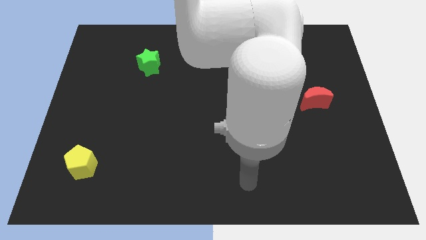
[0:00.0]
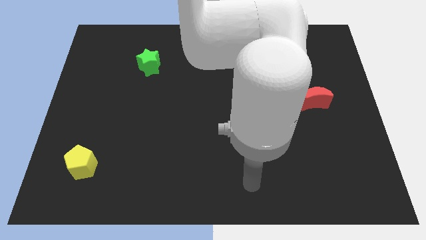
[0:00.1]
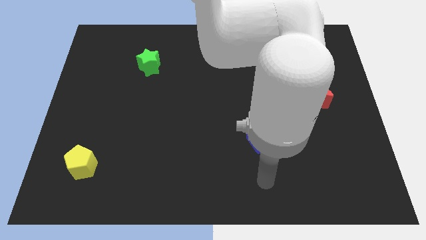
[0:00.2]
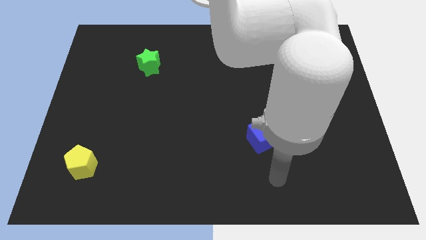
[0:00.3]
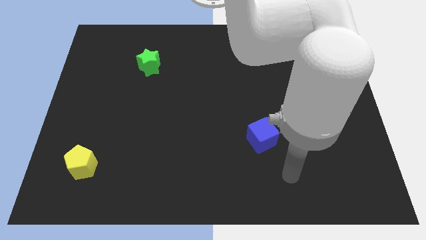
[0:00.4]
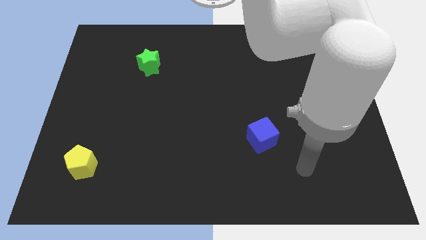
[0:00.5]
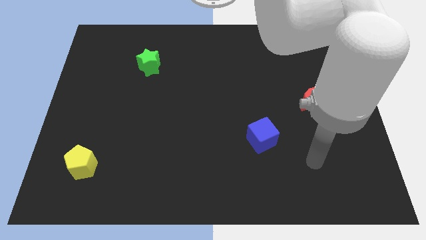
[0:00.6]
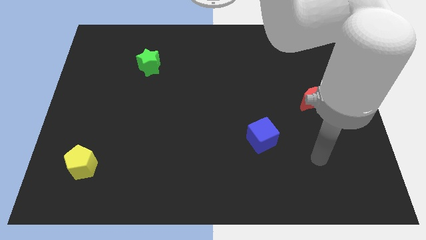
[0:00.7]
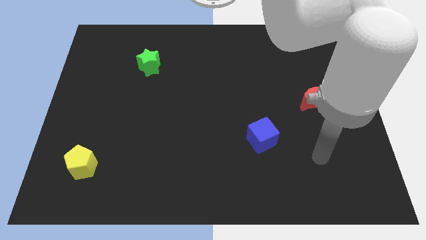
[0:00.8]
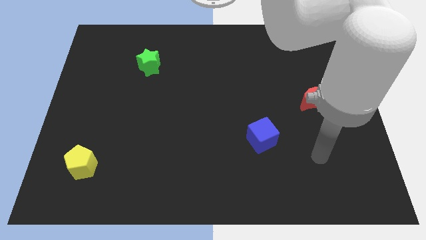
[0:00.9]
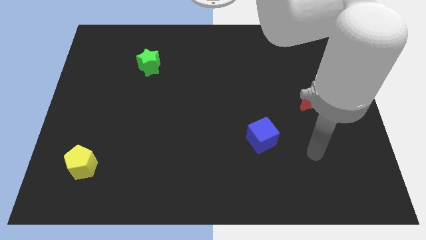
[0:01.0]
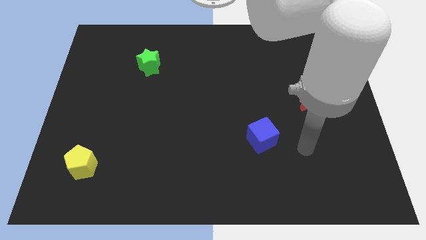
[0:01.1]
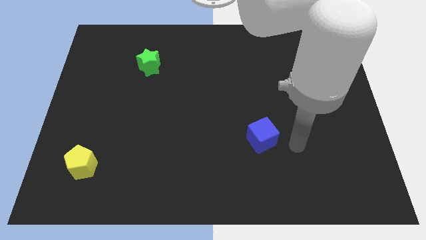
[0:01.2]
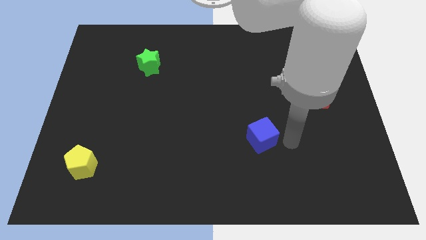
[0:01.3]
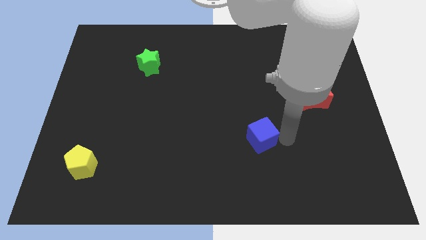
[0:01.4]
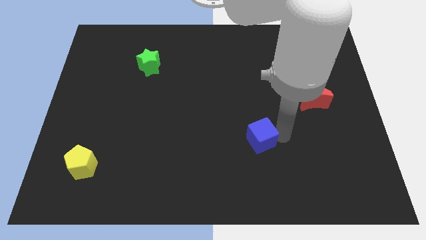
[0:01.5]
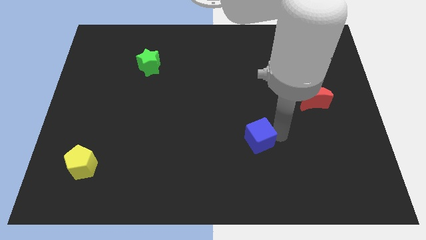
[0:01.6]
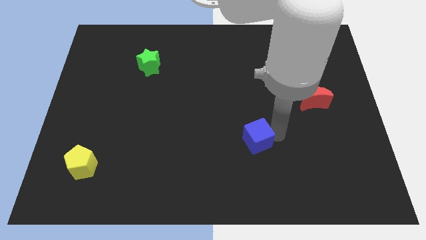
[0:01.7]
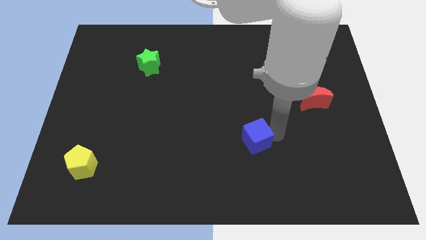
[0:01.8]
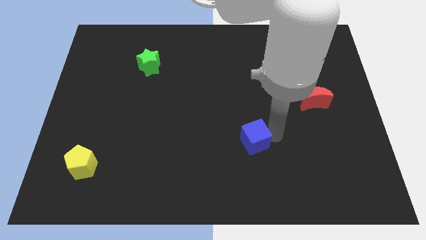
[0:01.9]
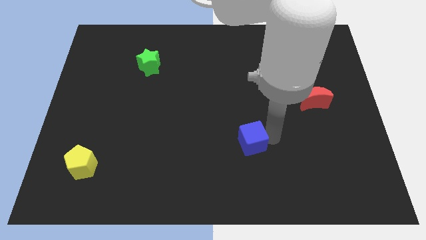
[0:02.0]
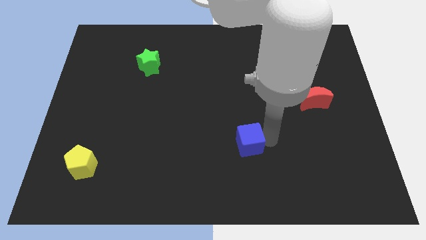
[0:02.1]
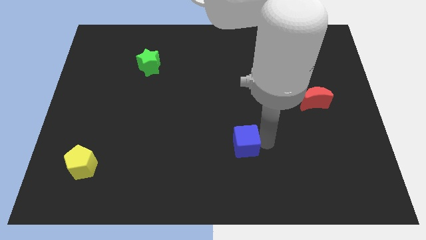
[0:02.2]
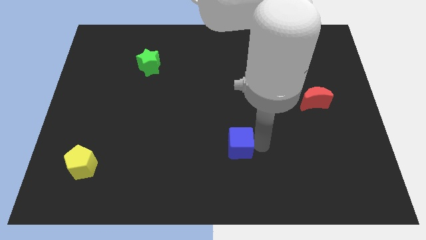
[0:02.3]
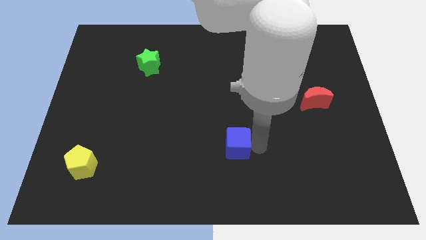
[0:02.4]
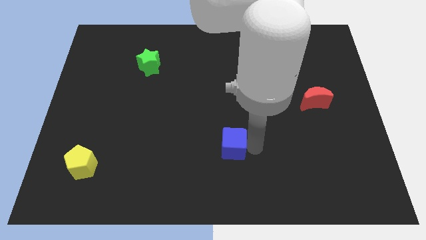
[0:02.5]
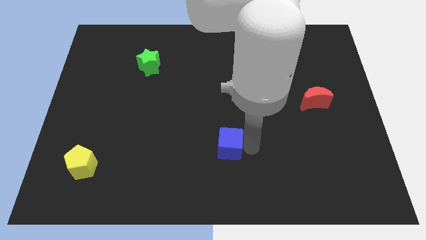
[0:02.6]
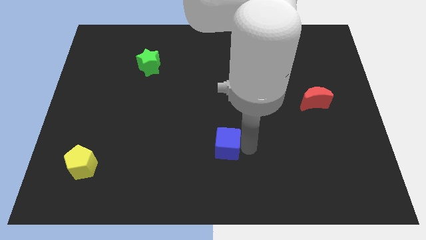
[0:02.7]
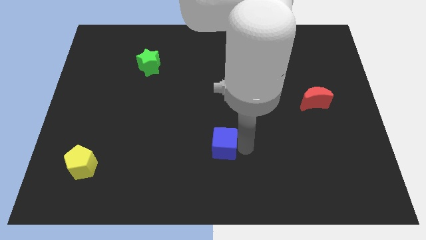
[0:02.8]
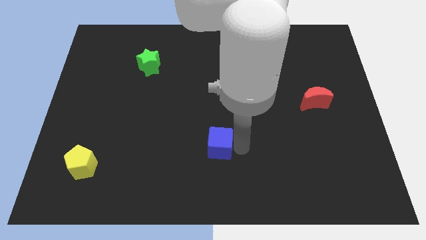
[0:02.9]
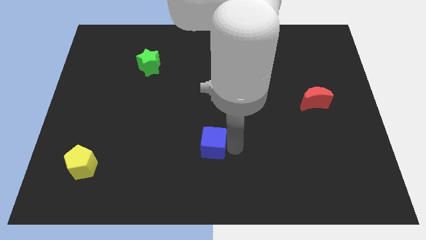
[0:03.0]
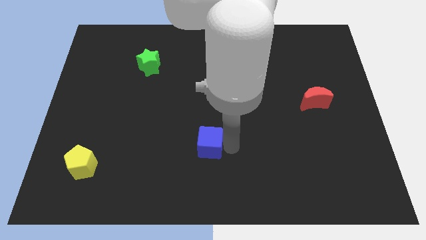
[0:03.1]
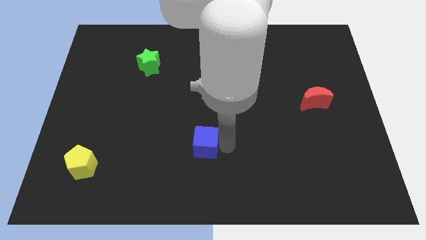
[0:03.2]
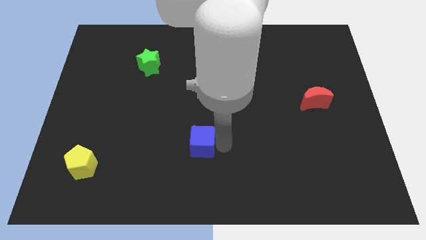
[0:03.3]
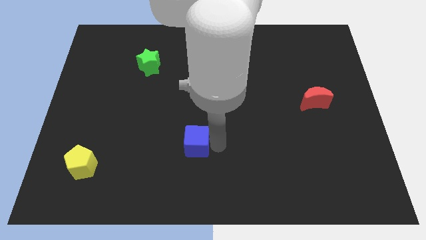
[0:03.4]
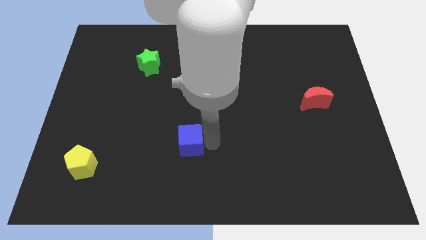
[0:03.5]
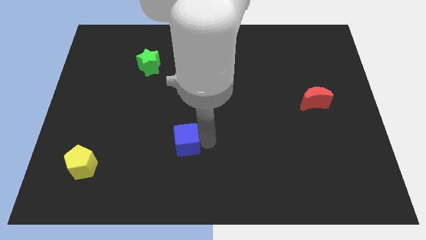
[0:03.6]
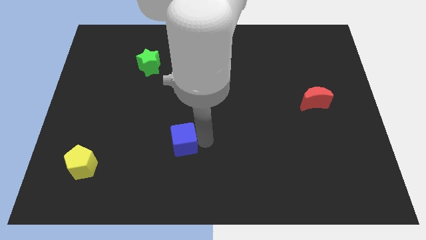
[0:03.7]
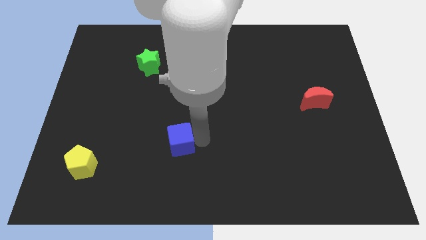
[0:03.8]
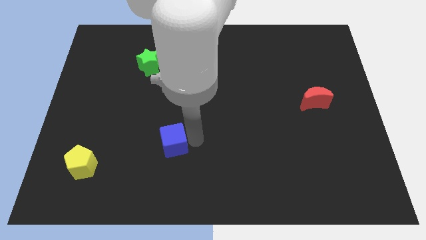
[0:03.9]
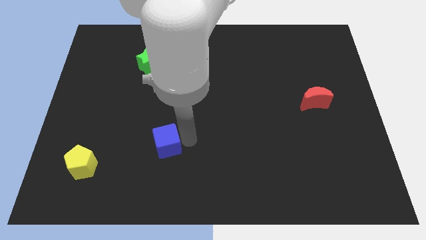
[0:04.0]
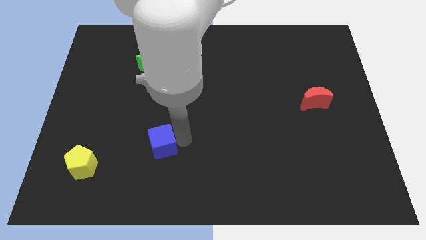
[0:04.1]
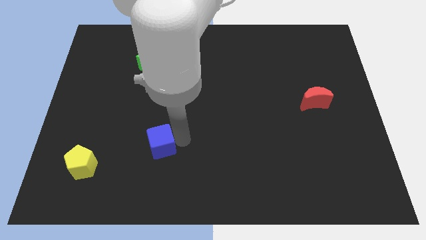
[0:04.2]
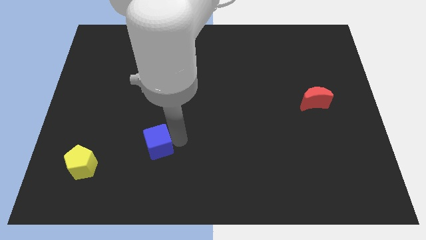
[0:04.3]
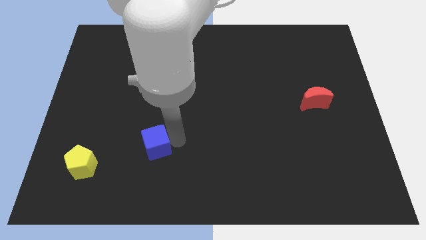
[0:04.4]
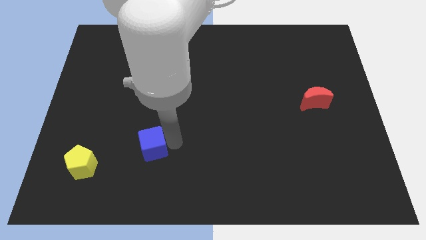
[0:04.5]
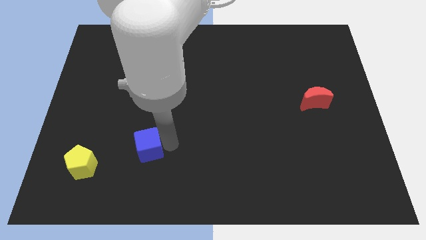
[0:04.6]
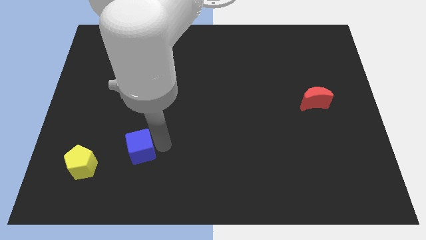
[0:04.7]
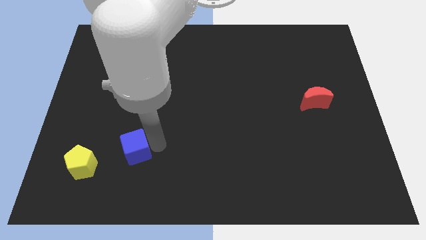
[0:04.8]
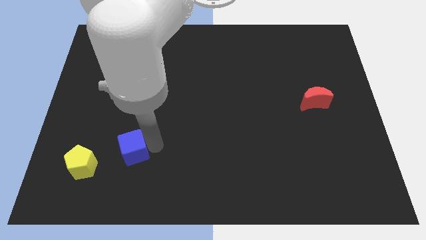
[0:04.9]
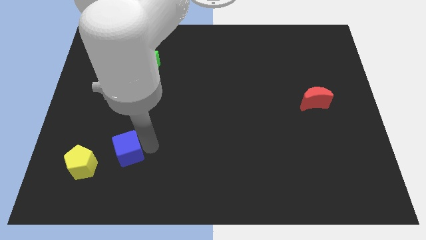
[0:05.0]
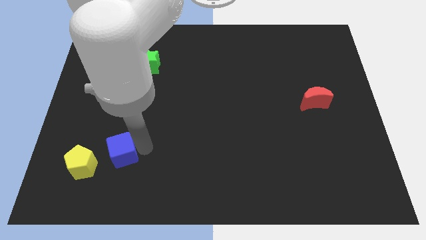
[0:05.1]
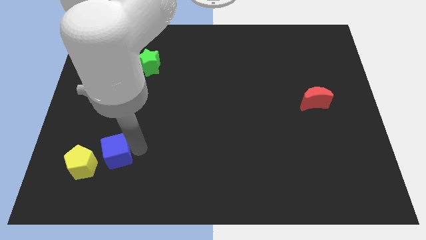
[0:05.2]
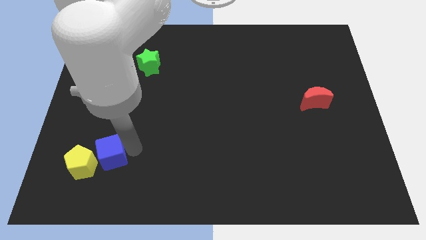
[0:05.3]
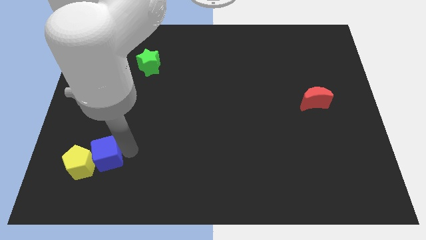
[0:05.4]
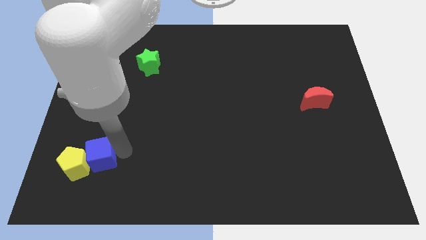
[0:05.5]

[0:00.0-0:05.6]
slide the cube close to the yellow pentagon

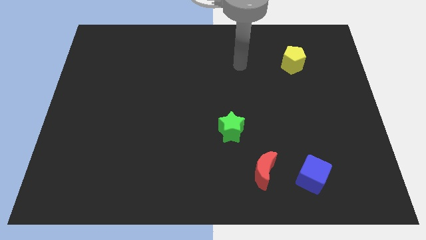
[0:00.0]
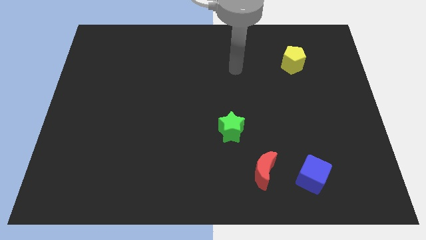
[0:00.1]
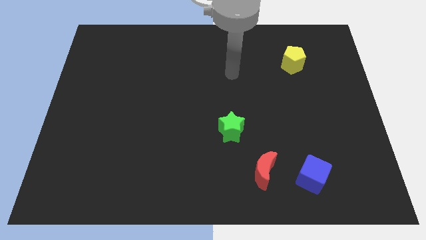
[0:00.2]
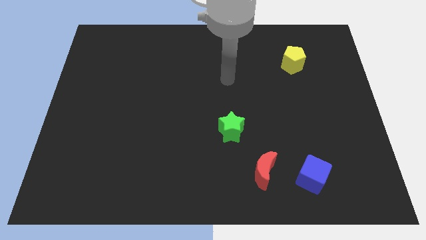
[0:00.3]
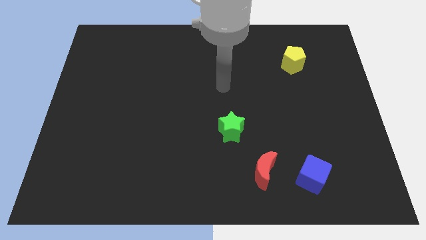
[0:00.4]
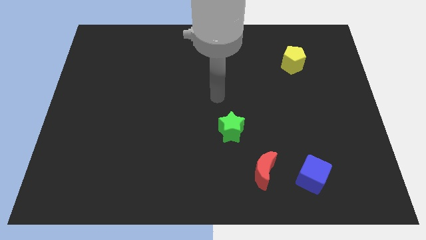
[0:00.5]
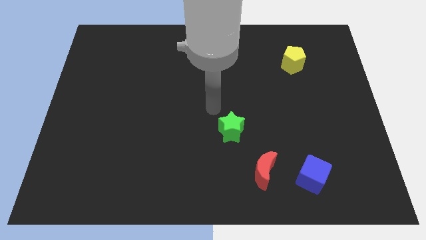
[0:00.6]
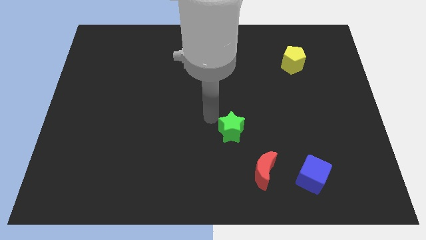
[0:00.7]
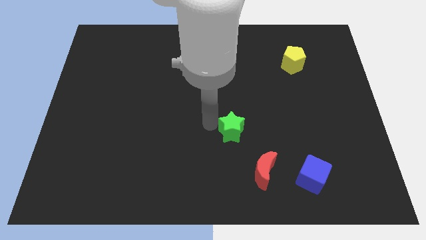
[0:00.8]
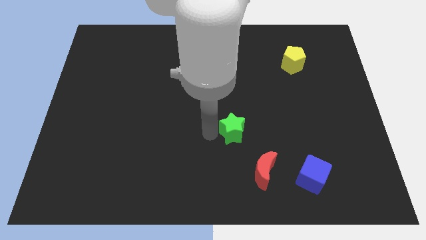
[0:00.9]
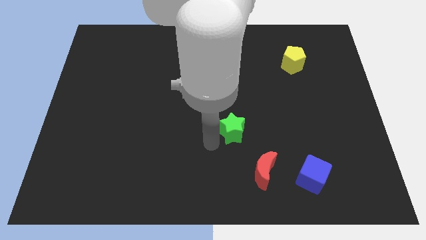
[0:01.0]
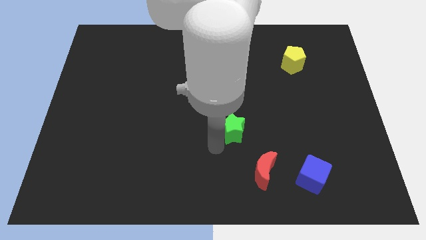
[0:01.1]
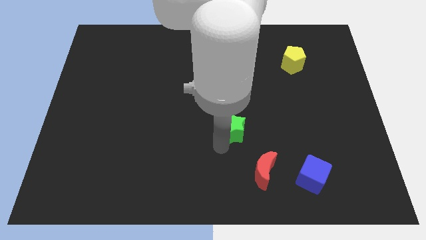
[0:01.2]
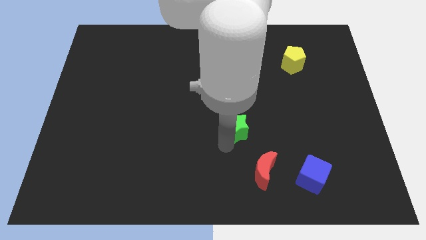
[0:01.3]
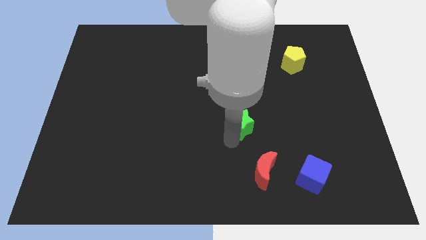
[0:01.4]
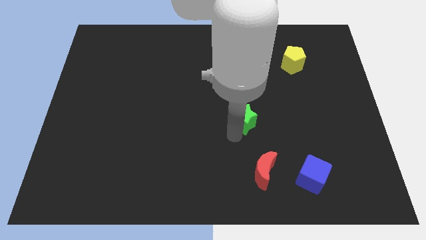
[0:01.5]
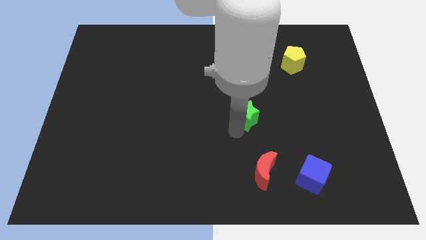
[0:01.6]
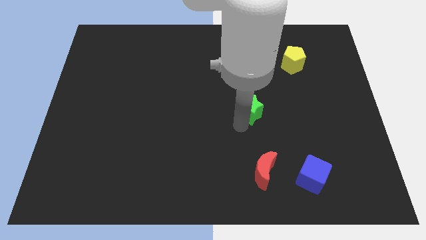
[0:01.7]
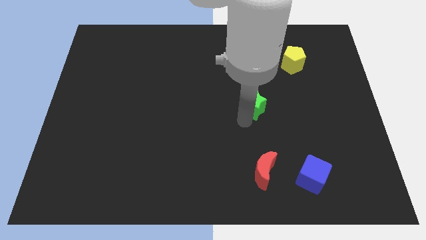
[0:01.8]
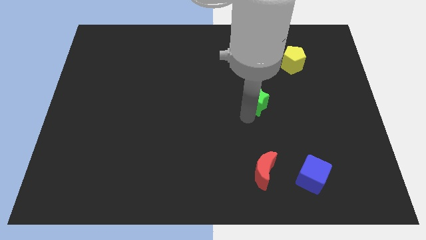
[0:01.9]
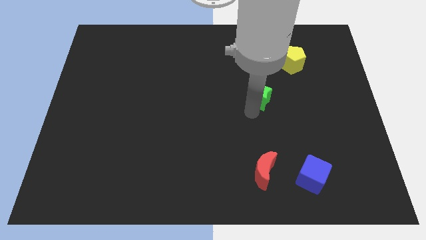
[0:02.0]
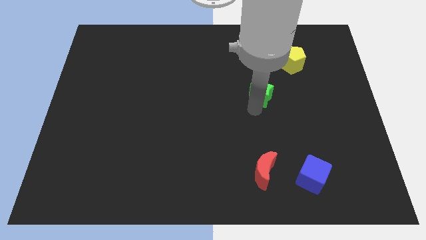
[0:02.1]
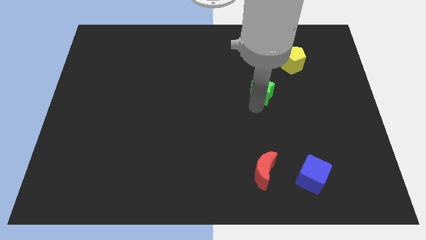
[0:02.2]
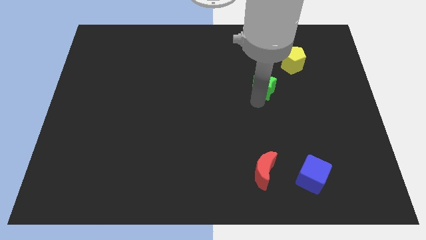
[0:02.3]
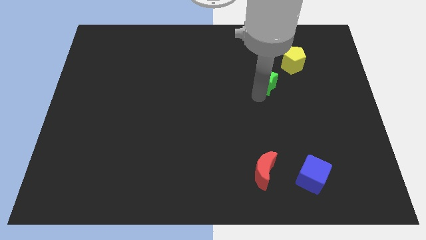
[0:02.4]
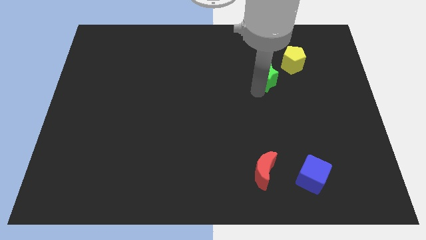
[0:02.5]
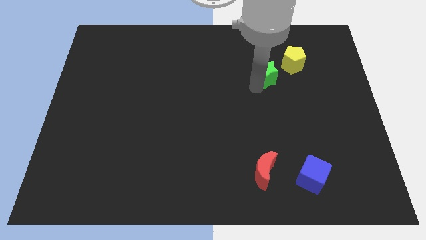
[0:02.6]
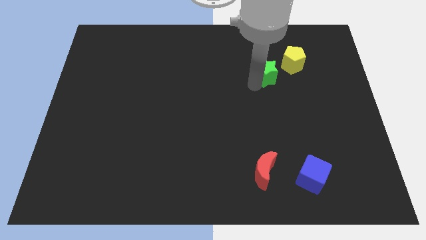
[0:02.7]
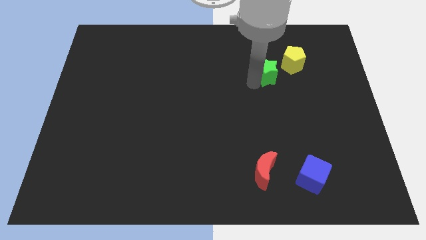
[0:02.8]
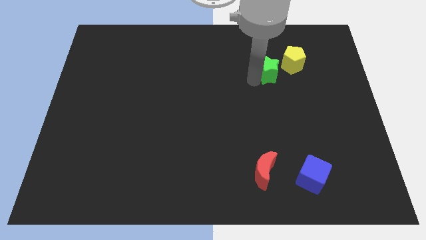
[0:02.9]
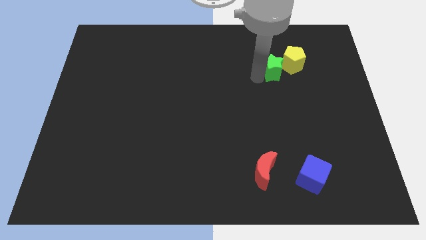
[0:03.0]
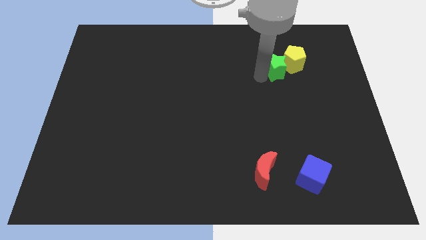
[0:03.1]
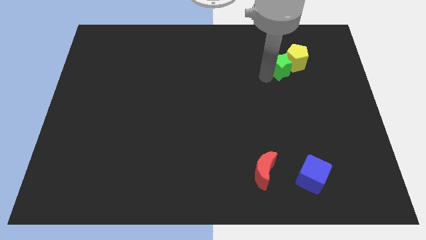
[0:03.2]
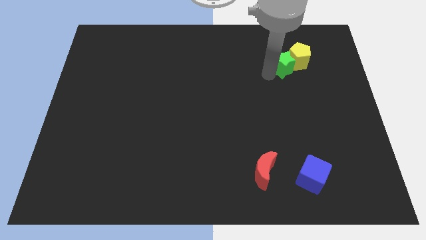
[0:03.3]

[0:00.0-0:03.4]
push the green star to the pentagon
